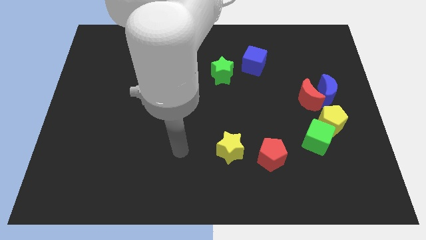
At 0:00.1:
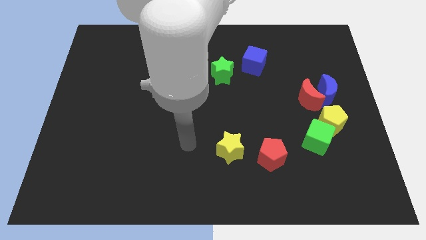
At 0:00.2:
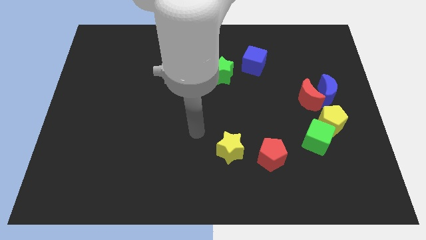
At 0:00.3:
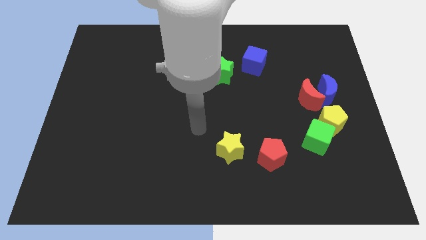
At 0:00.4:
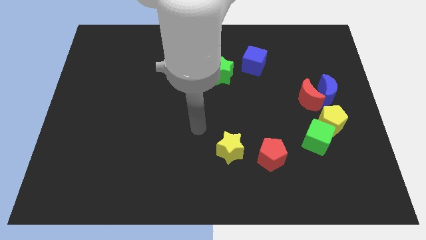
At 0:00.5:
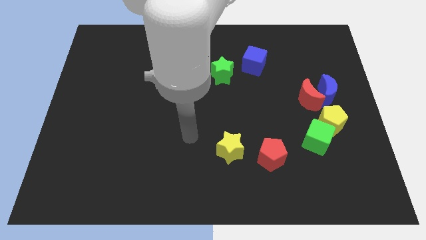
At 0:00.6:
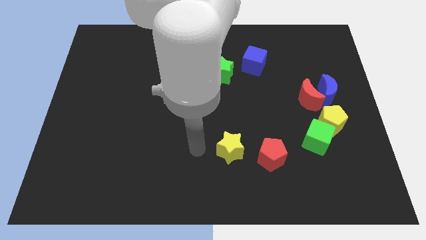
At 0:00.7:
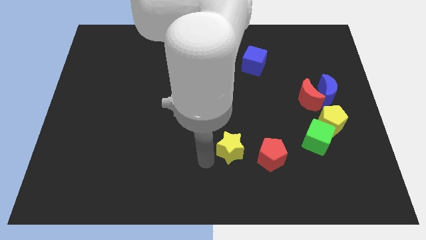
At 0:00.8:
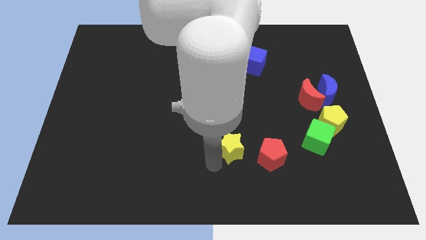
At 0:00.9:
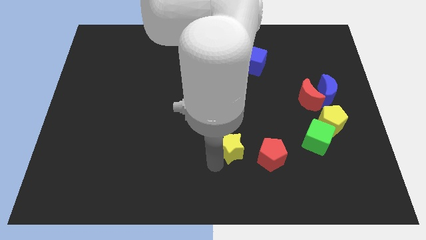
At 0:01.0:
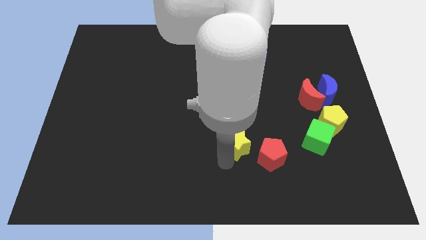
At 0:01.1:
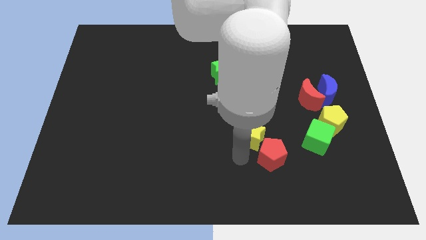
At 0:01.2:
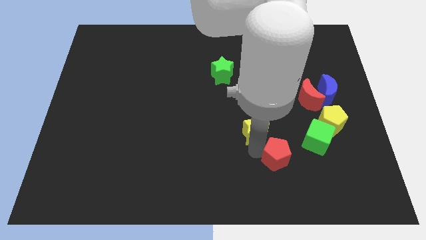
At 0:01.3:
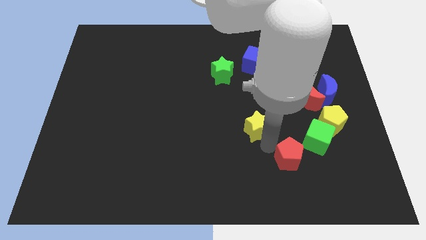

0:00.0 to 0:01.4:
move the yellow star slightly upwards

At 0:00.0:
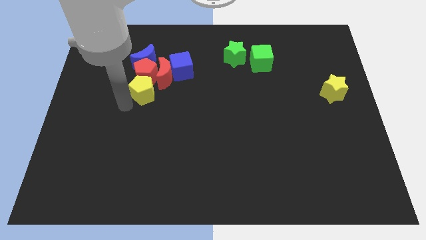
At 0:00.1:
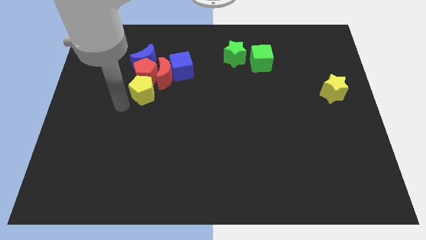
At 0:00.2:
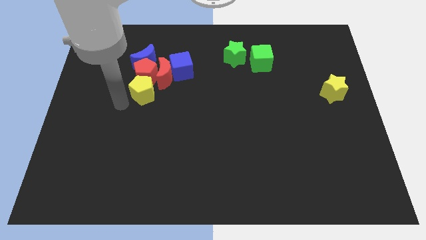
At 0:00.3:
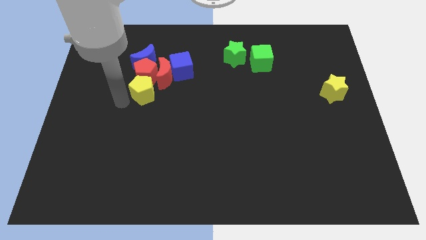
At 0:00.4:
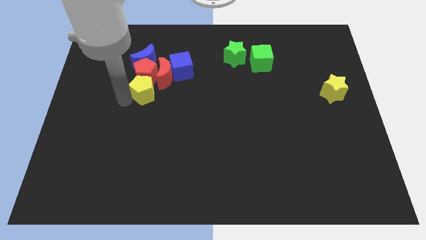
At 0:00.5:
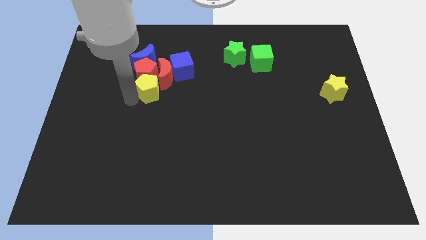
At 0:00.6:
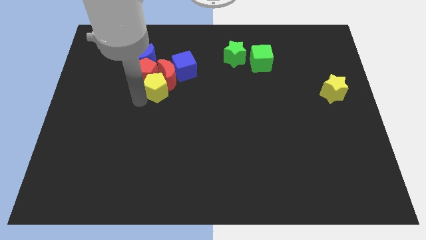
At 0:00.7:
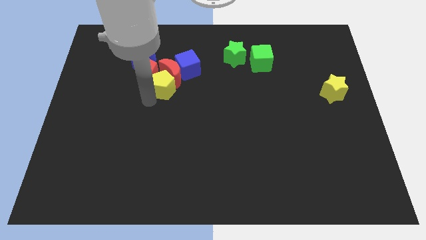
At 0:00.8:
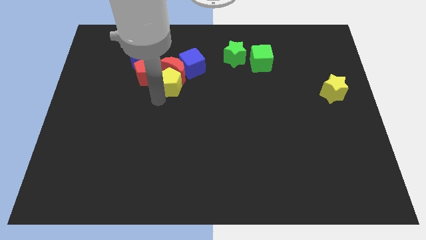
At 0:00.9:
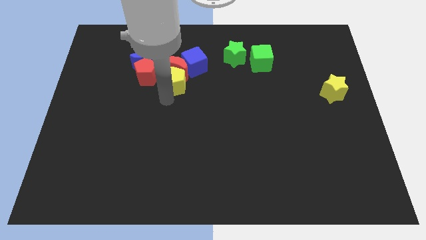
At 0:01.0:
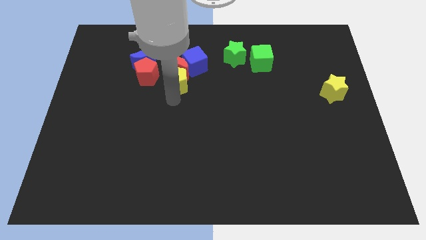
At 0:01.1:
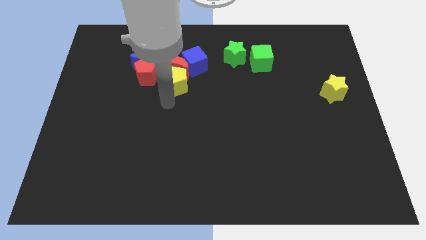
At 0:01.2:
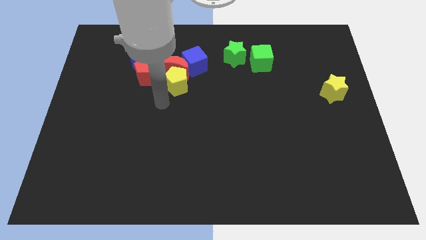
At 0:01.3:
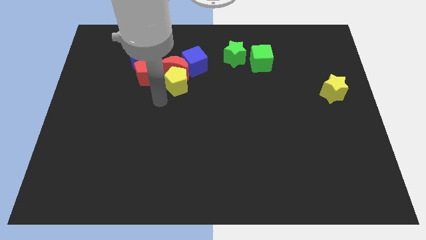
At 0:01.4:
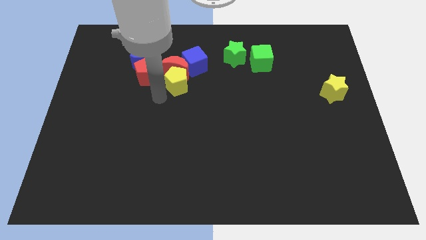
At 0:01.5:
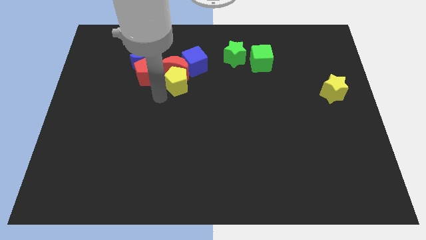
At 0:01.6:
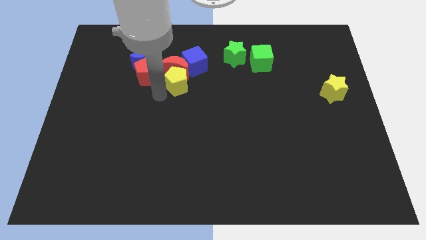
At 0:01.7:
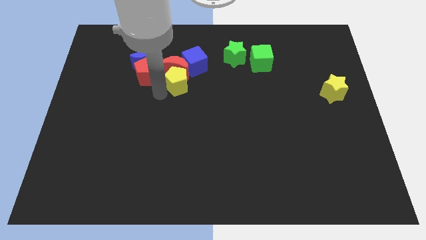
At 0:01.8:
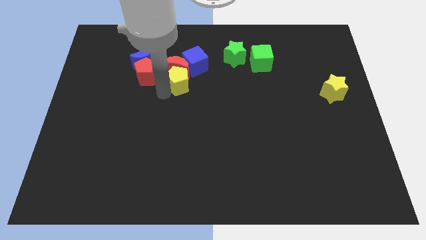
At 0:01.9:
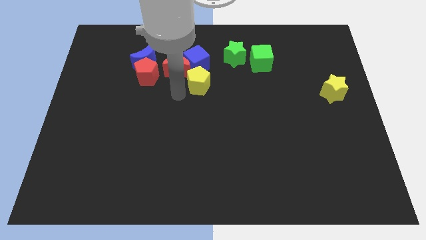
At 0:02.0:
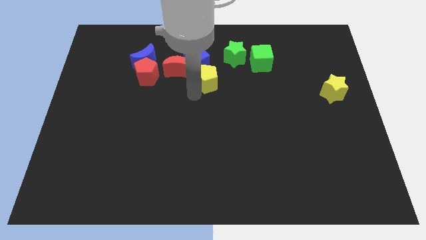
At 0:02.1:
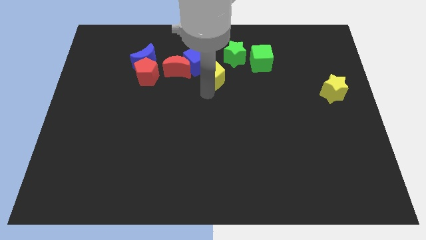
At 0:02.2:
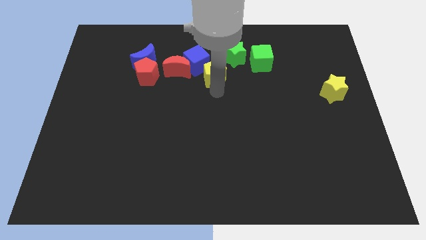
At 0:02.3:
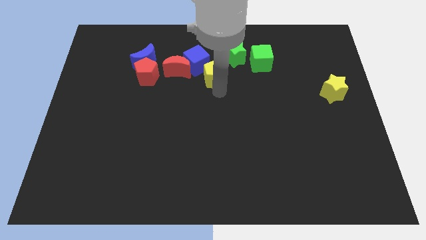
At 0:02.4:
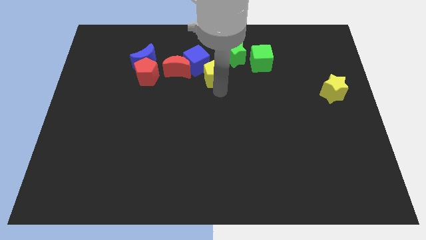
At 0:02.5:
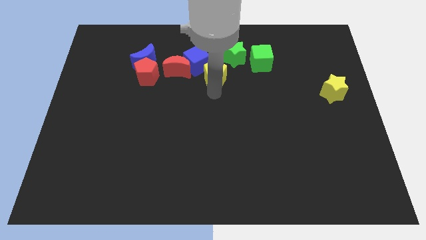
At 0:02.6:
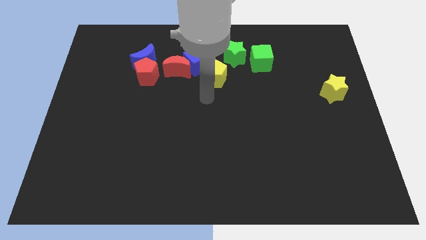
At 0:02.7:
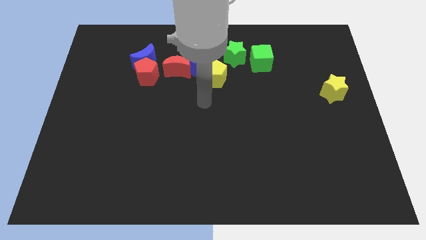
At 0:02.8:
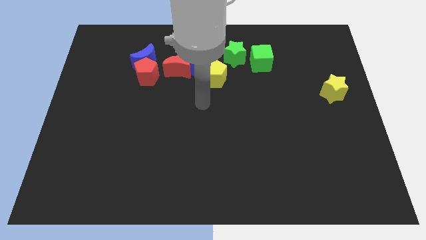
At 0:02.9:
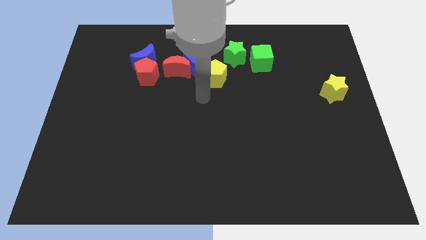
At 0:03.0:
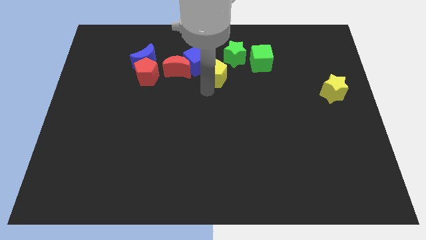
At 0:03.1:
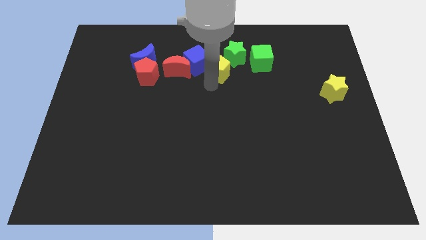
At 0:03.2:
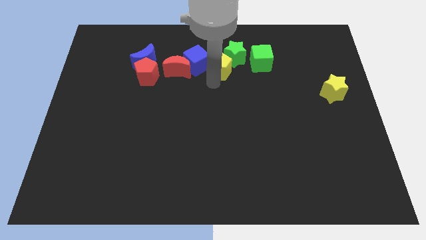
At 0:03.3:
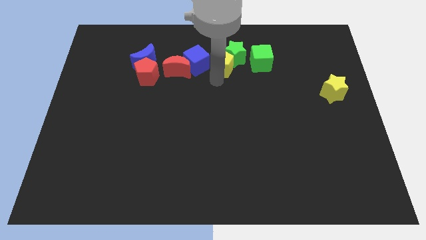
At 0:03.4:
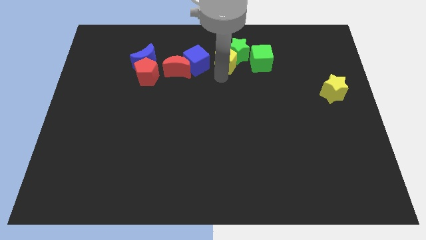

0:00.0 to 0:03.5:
push the yellow pentagon into the bottom left side of the green star

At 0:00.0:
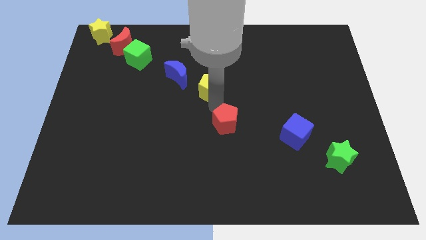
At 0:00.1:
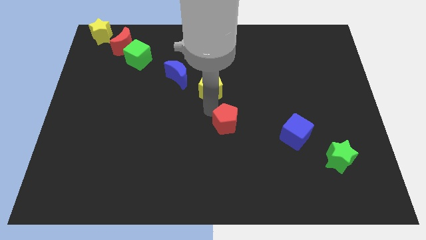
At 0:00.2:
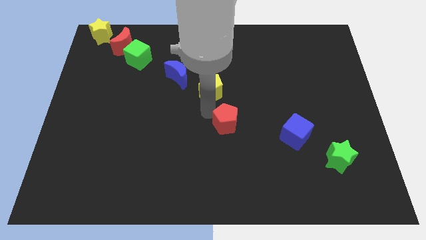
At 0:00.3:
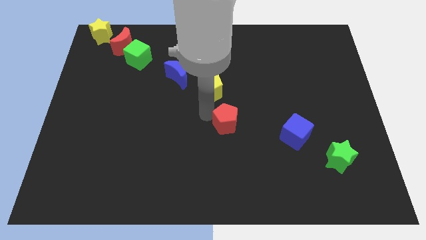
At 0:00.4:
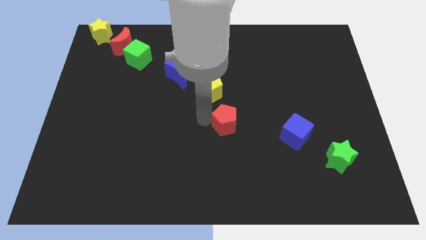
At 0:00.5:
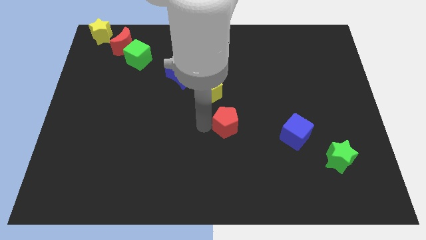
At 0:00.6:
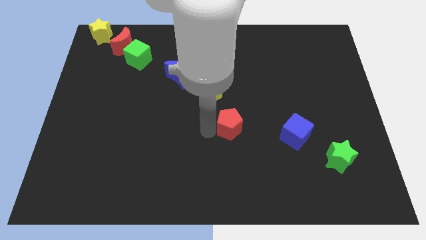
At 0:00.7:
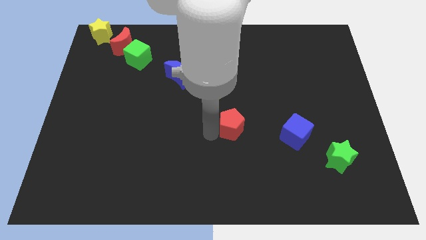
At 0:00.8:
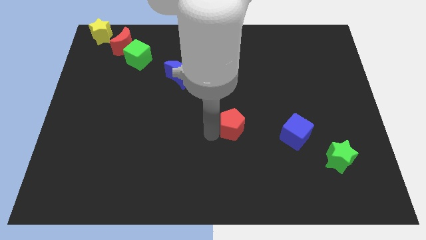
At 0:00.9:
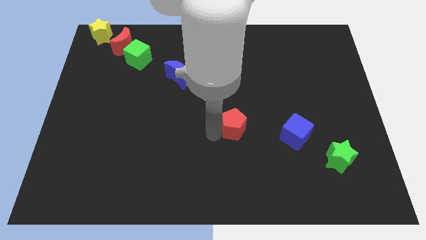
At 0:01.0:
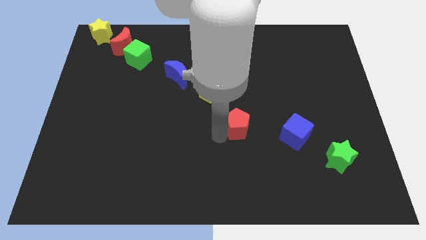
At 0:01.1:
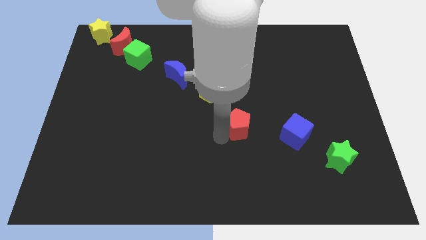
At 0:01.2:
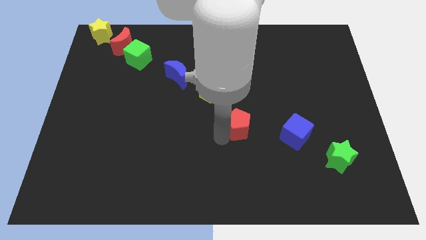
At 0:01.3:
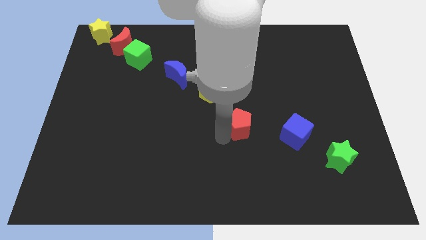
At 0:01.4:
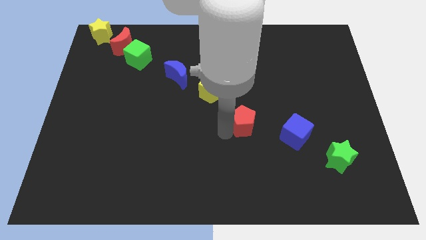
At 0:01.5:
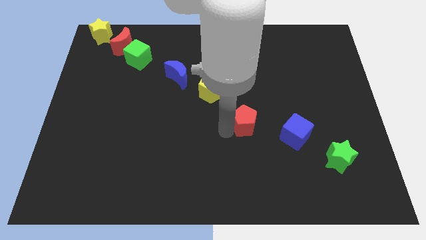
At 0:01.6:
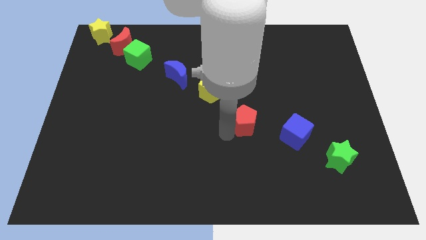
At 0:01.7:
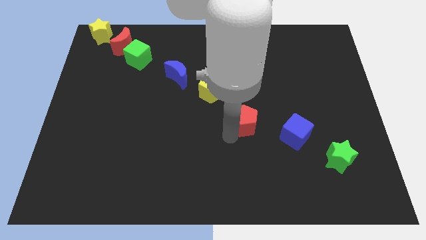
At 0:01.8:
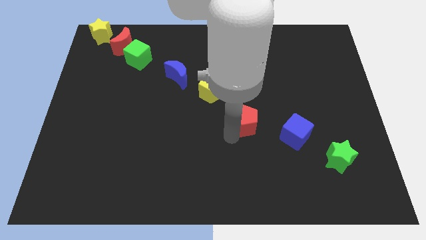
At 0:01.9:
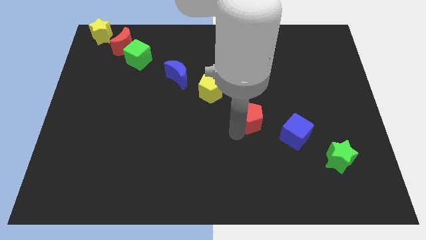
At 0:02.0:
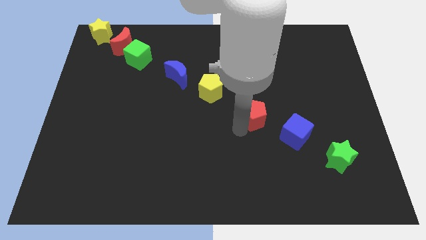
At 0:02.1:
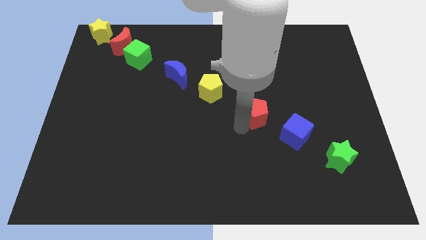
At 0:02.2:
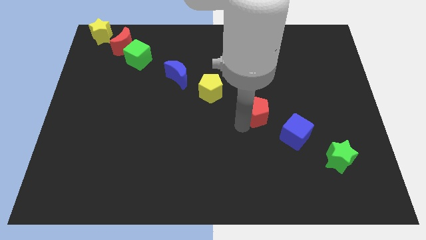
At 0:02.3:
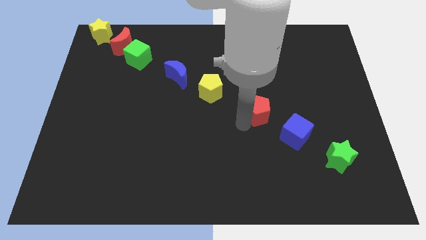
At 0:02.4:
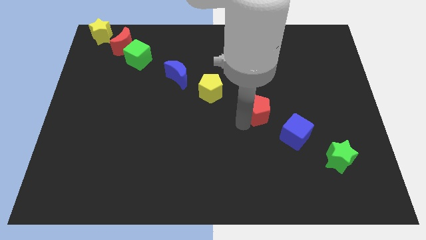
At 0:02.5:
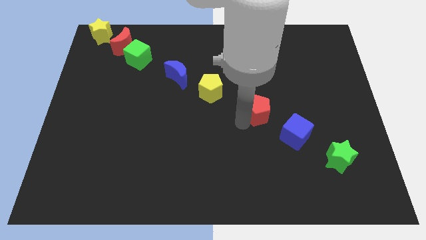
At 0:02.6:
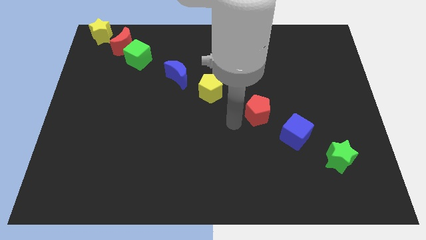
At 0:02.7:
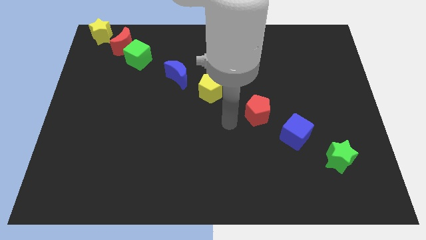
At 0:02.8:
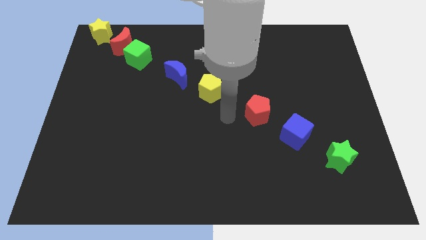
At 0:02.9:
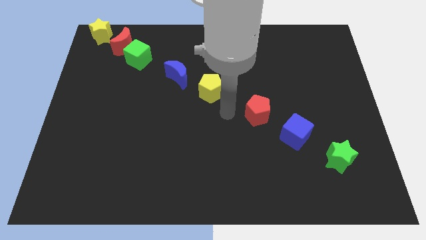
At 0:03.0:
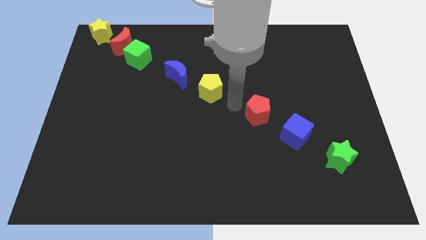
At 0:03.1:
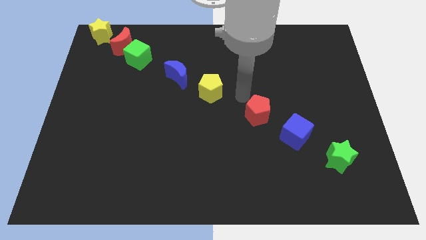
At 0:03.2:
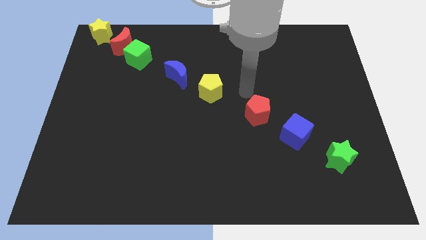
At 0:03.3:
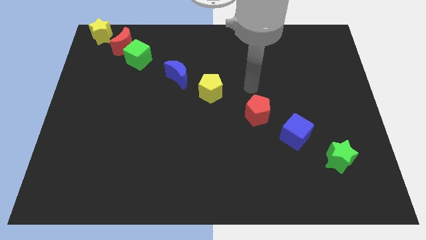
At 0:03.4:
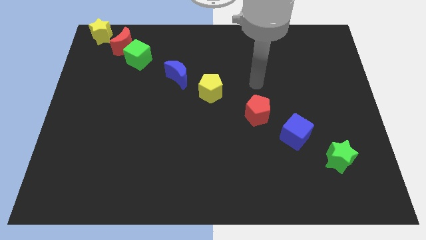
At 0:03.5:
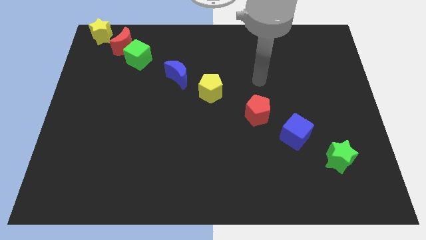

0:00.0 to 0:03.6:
slightly move the red pentagon towards the blue cube

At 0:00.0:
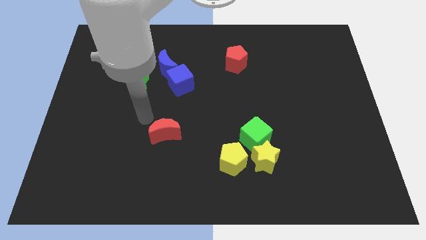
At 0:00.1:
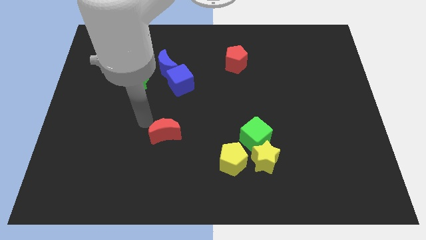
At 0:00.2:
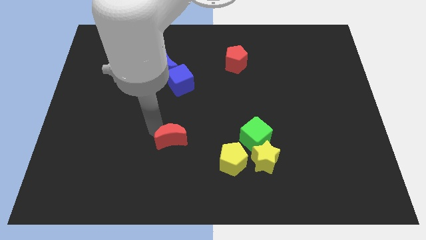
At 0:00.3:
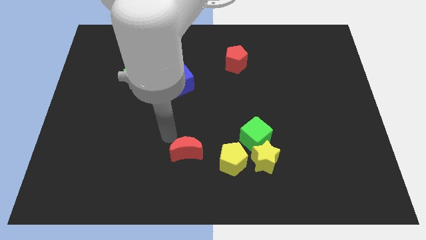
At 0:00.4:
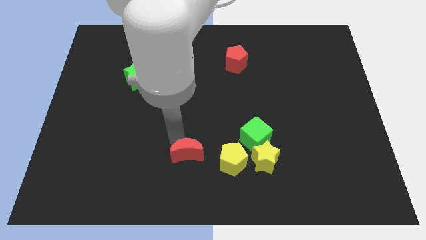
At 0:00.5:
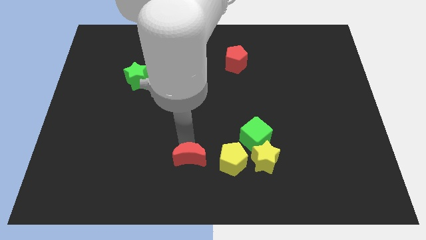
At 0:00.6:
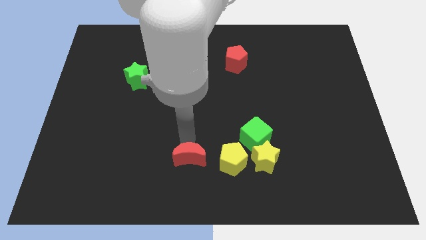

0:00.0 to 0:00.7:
move the red moon left to the yellow pentagon
